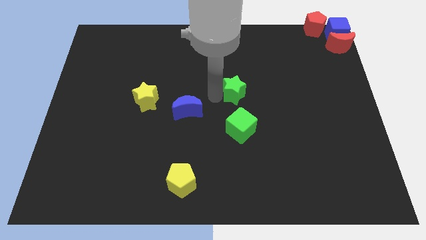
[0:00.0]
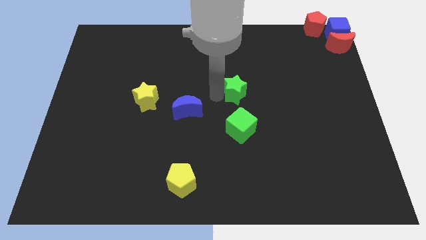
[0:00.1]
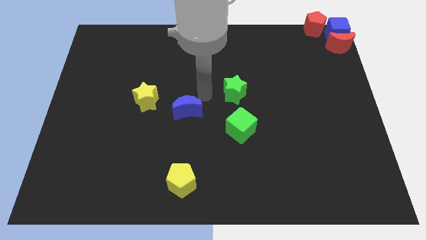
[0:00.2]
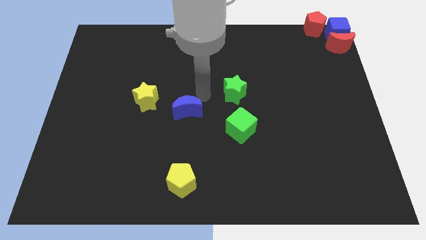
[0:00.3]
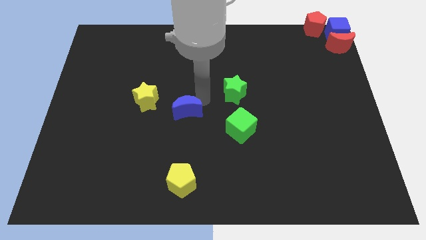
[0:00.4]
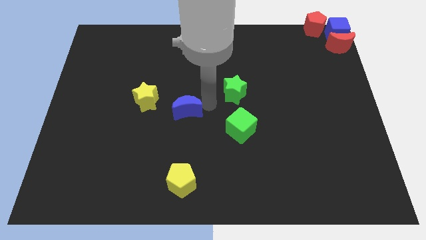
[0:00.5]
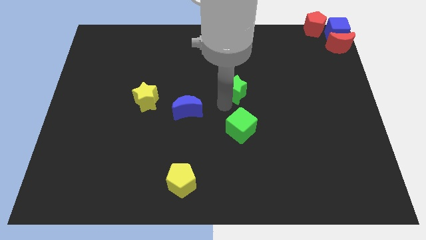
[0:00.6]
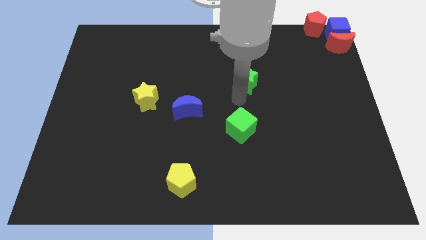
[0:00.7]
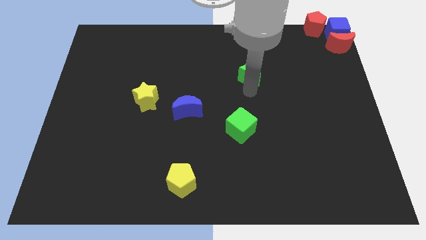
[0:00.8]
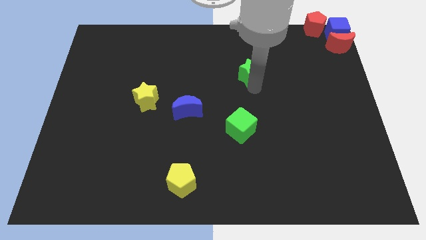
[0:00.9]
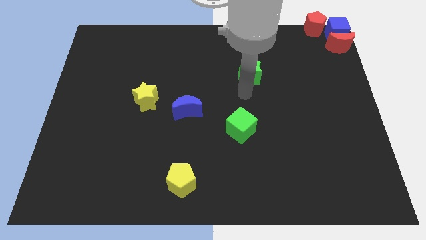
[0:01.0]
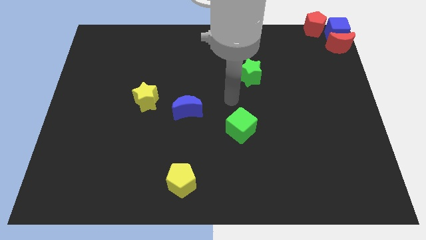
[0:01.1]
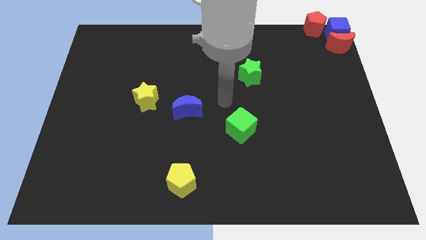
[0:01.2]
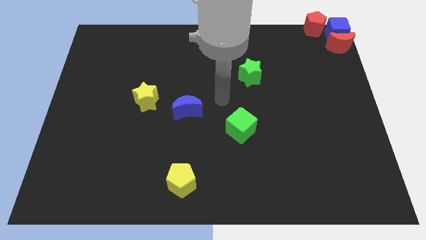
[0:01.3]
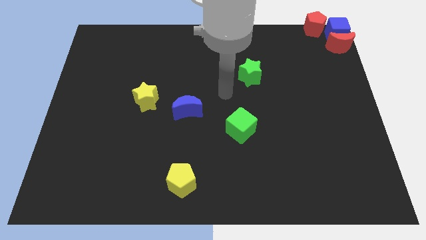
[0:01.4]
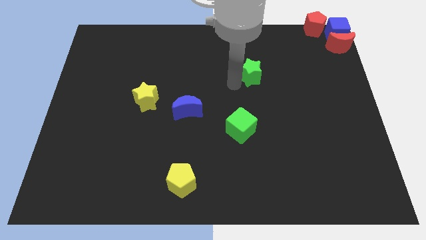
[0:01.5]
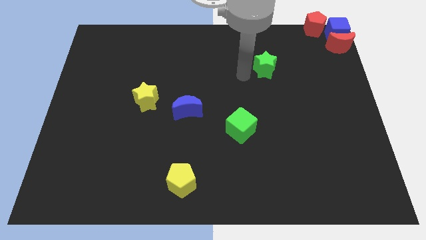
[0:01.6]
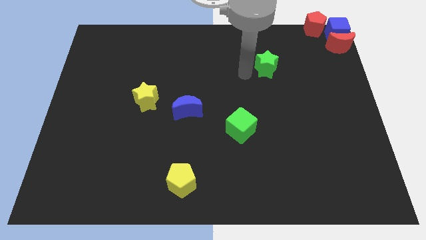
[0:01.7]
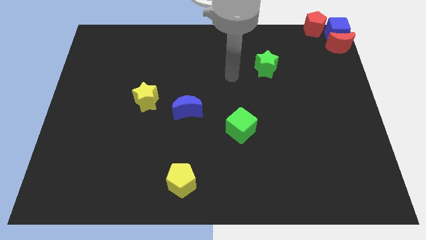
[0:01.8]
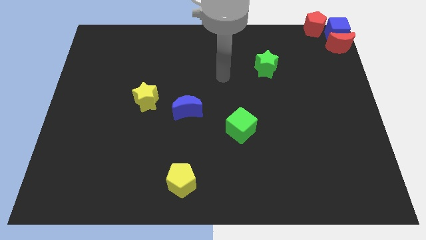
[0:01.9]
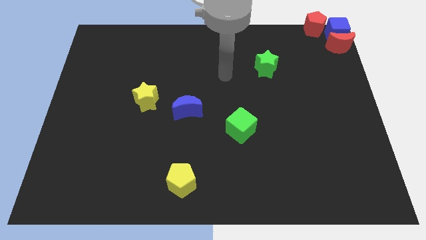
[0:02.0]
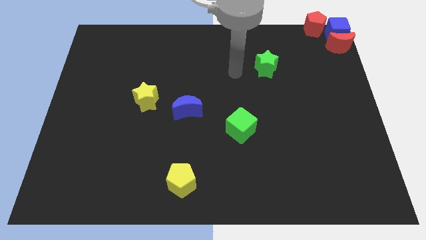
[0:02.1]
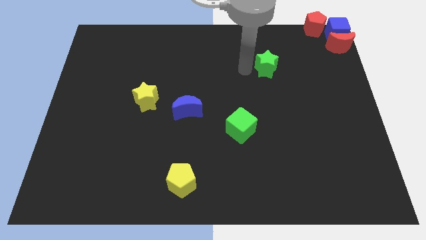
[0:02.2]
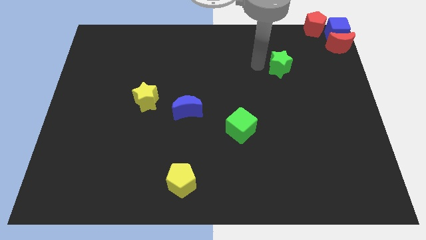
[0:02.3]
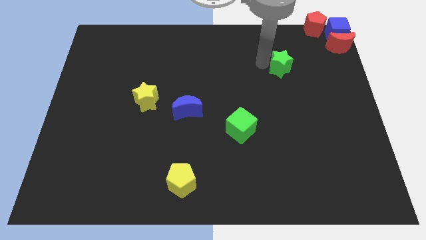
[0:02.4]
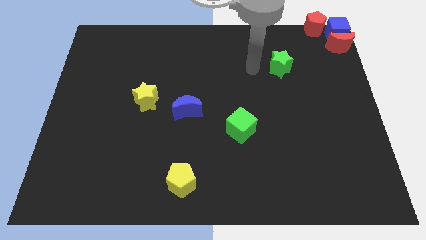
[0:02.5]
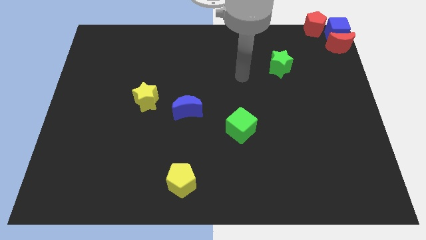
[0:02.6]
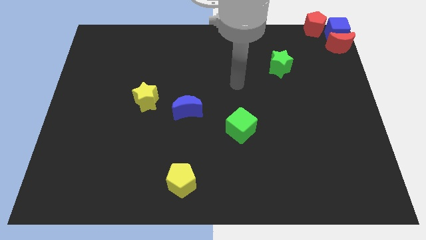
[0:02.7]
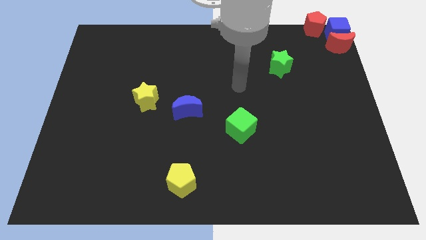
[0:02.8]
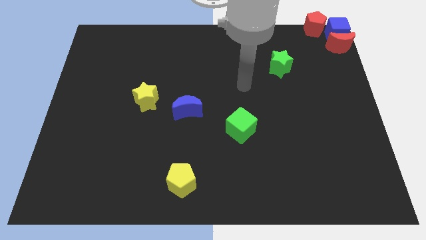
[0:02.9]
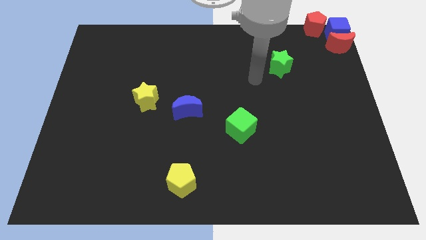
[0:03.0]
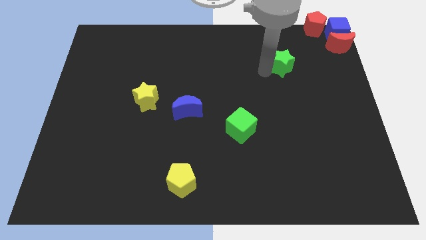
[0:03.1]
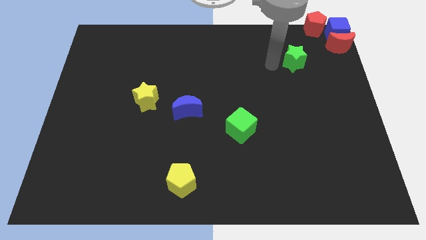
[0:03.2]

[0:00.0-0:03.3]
move the green block towards the top right side

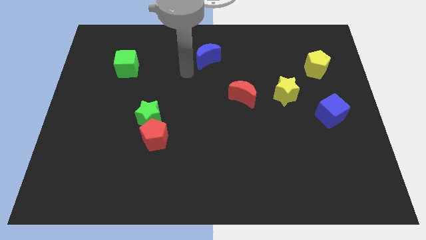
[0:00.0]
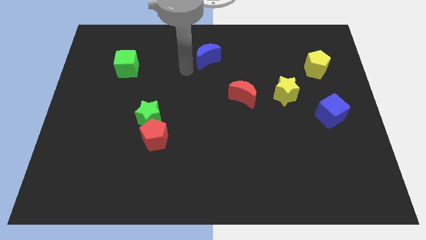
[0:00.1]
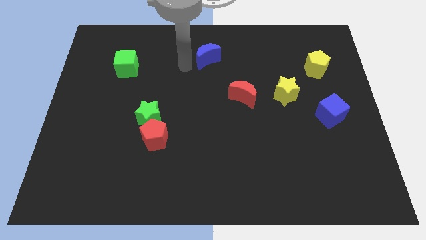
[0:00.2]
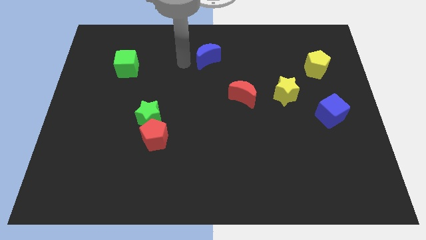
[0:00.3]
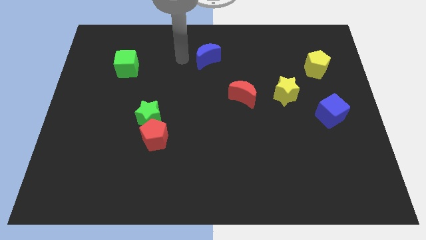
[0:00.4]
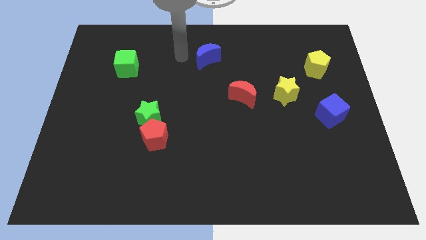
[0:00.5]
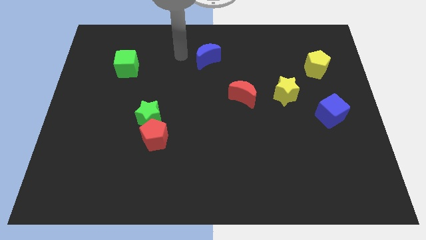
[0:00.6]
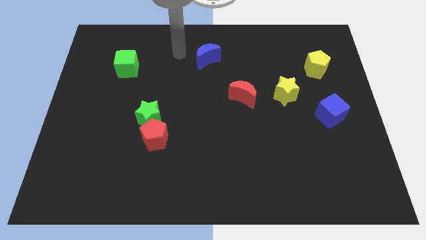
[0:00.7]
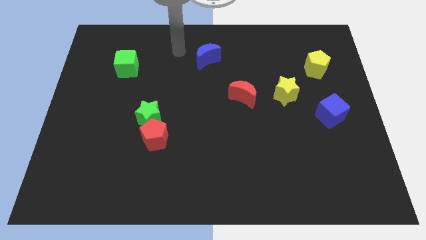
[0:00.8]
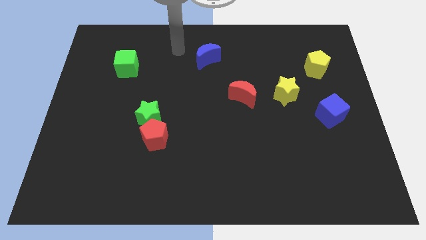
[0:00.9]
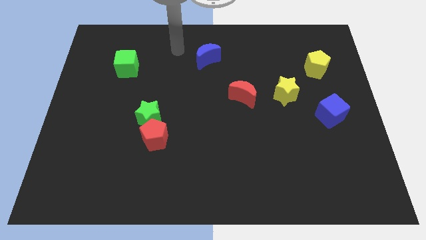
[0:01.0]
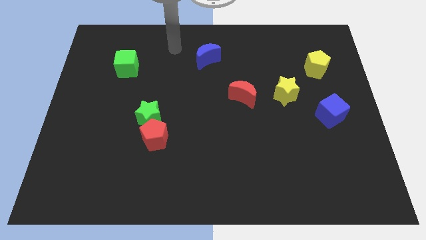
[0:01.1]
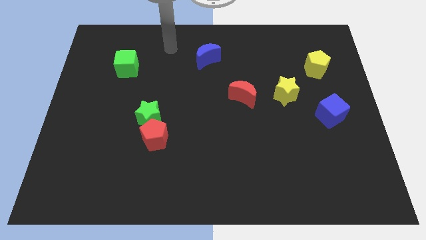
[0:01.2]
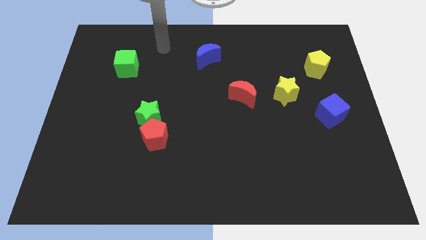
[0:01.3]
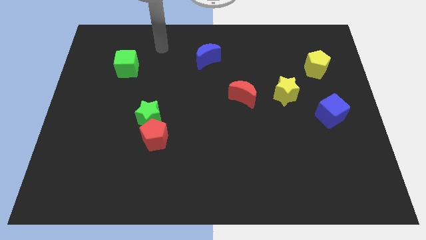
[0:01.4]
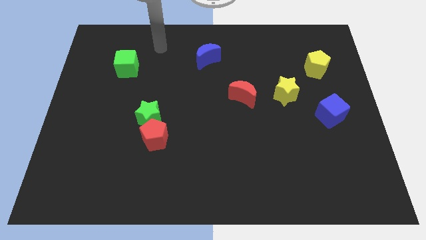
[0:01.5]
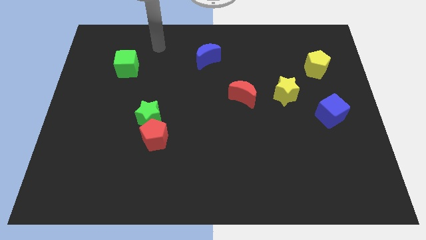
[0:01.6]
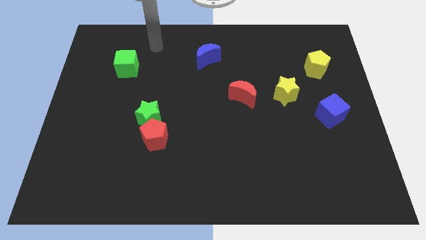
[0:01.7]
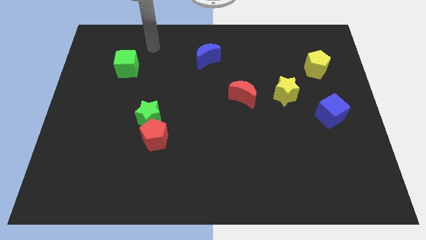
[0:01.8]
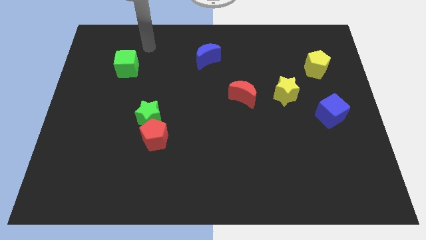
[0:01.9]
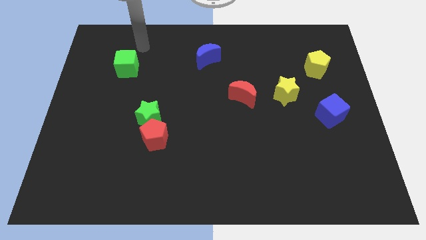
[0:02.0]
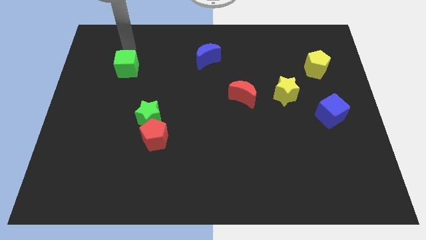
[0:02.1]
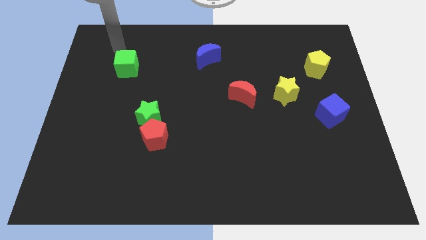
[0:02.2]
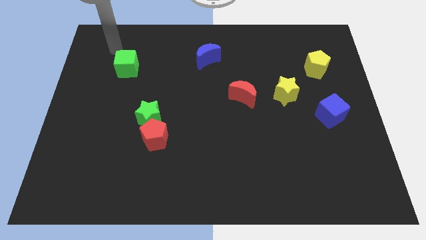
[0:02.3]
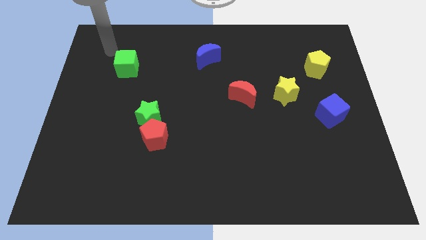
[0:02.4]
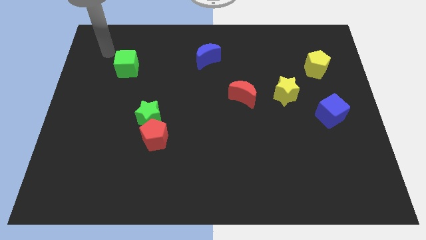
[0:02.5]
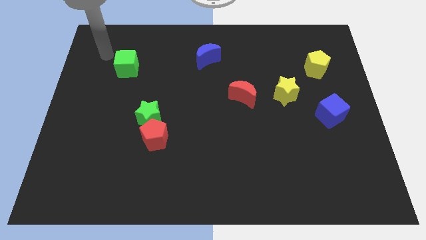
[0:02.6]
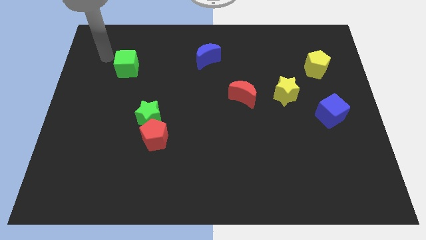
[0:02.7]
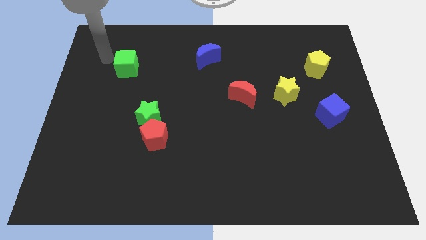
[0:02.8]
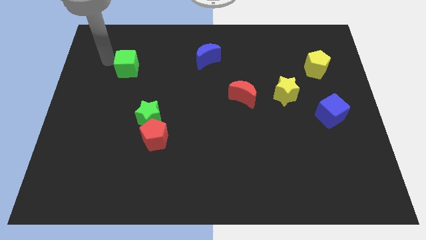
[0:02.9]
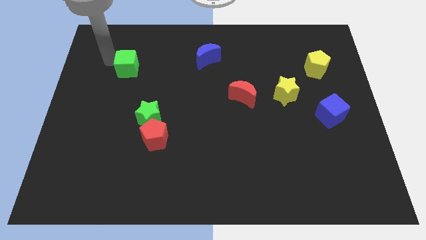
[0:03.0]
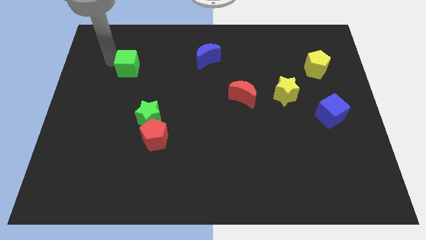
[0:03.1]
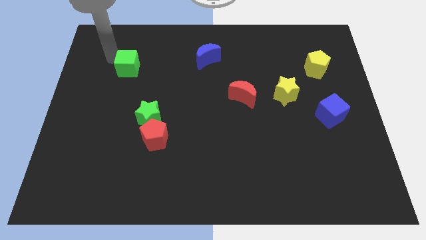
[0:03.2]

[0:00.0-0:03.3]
place the arm left to the green cube

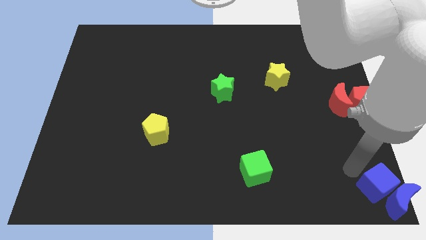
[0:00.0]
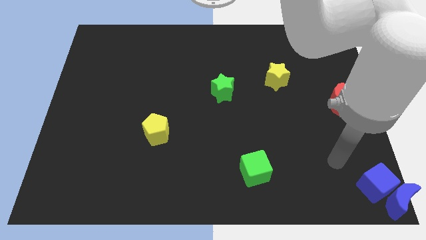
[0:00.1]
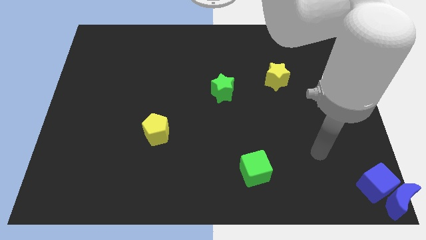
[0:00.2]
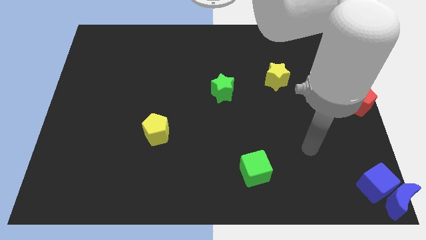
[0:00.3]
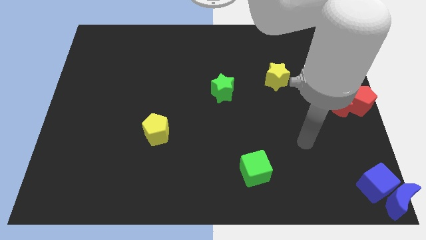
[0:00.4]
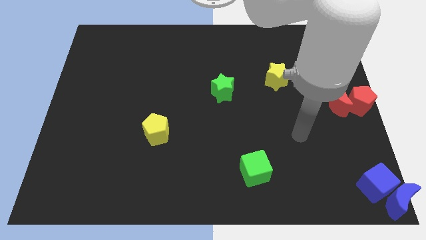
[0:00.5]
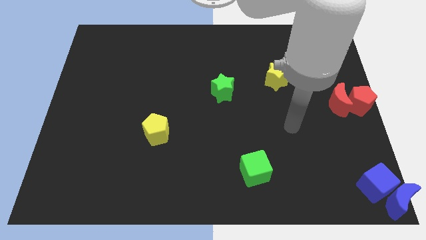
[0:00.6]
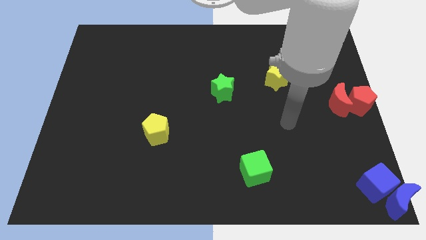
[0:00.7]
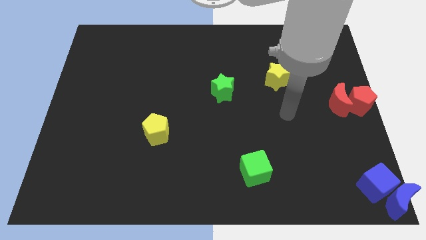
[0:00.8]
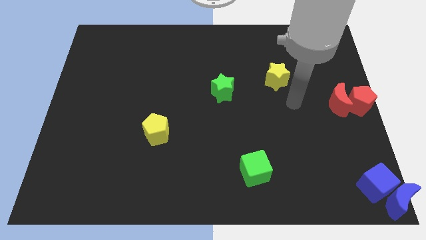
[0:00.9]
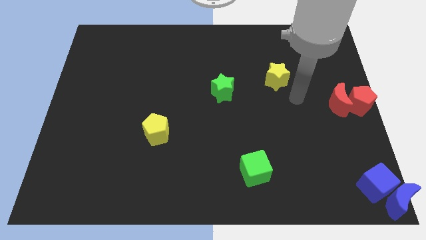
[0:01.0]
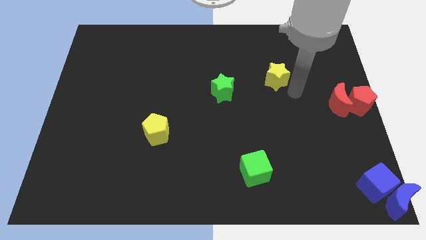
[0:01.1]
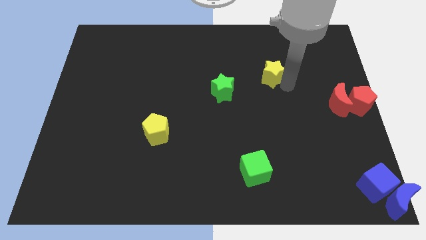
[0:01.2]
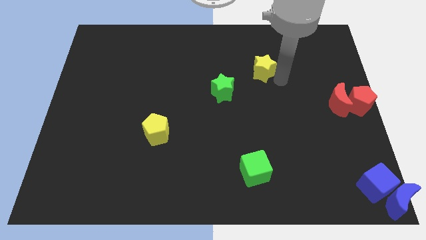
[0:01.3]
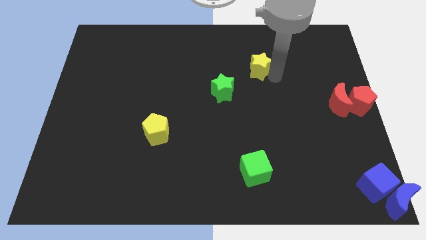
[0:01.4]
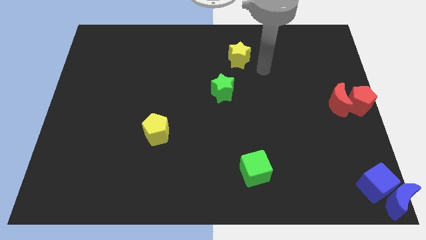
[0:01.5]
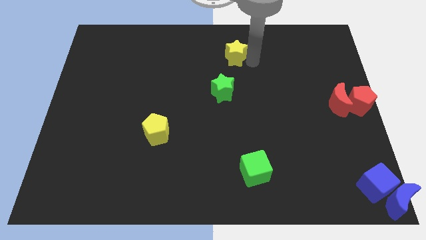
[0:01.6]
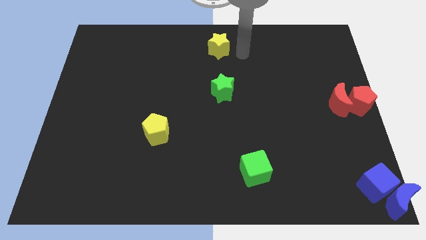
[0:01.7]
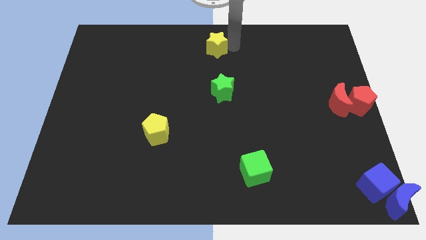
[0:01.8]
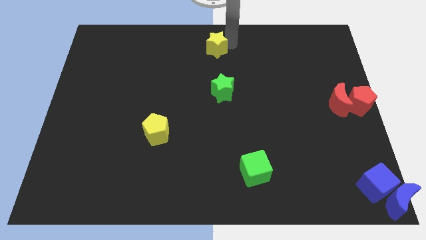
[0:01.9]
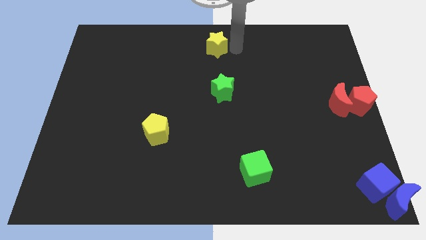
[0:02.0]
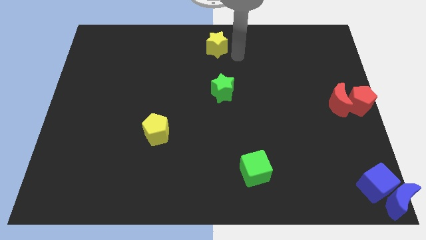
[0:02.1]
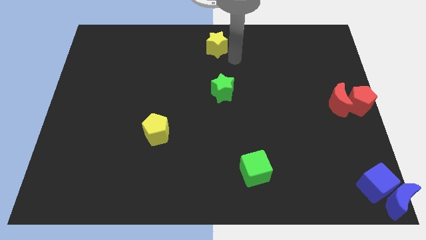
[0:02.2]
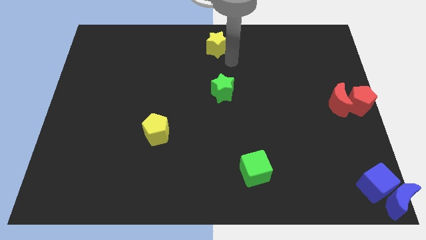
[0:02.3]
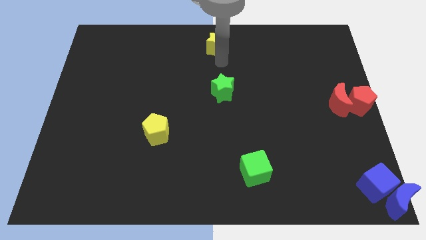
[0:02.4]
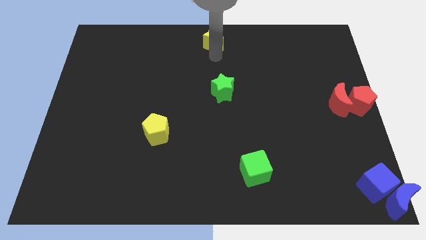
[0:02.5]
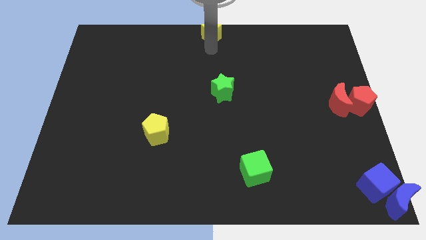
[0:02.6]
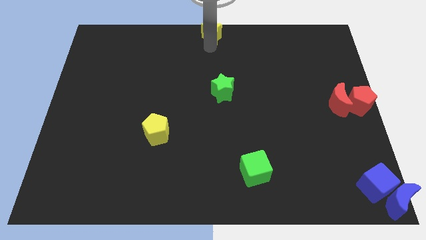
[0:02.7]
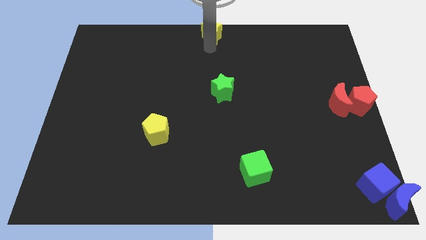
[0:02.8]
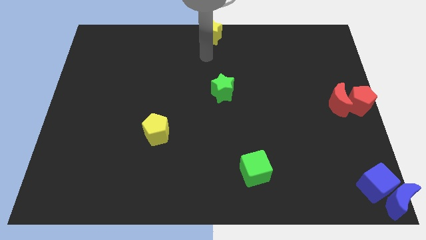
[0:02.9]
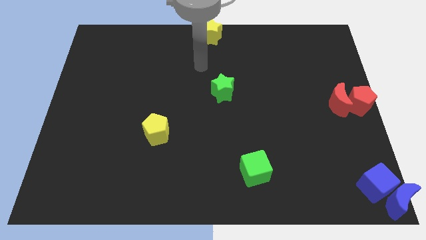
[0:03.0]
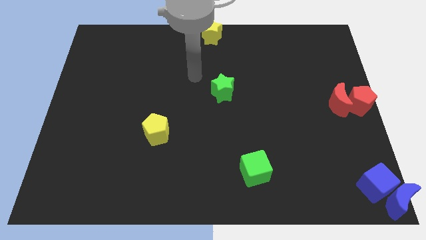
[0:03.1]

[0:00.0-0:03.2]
put the yellow star to the top center of the board
